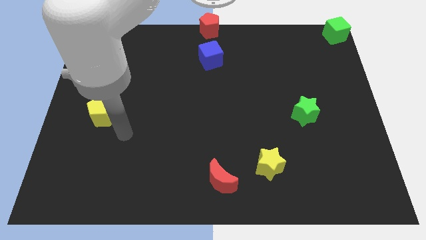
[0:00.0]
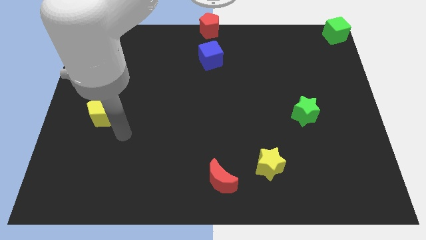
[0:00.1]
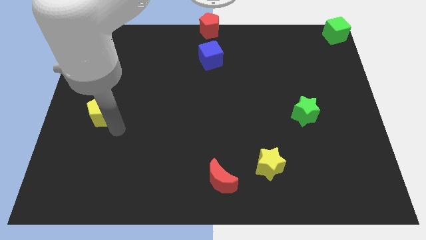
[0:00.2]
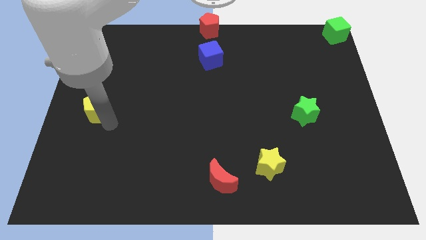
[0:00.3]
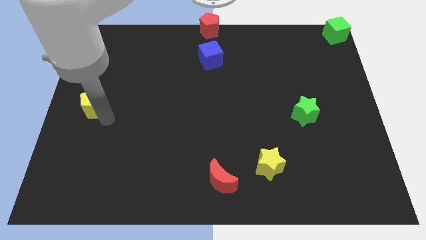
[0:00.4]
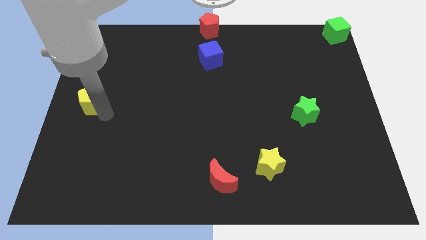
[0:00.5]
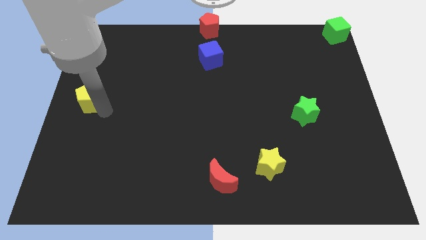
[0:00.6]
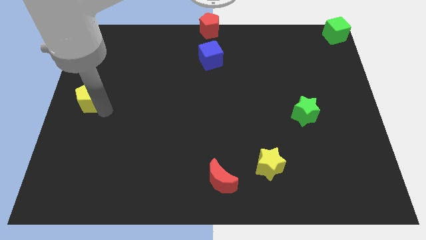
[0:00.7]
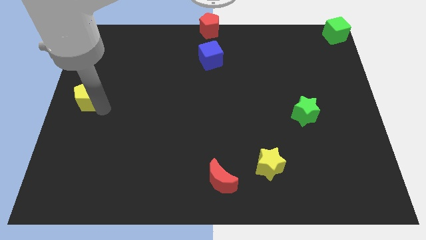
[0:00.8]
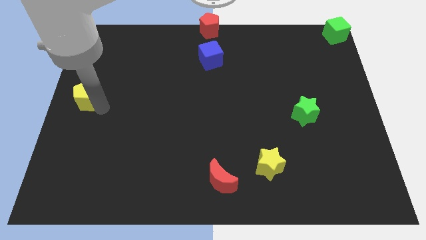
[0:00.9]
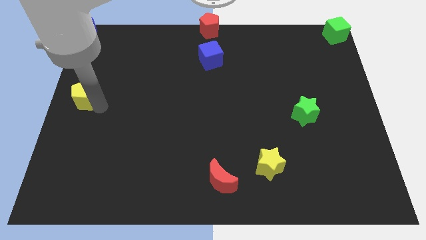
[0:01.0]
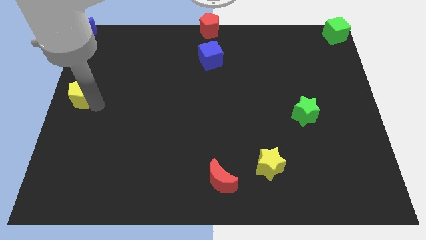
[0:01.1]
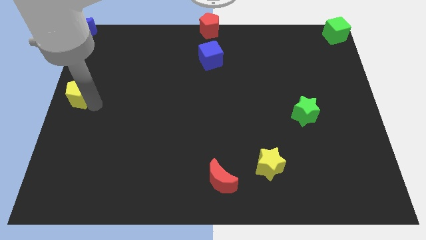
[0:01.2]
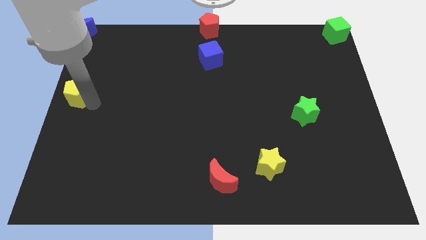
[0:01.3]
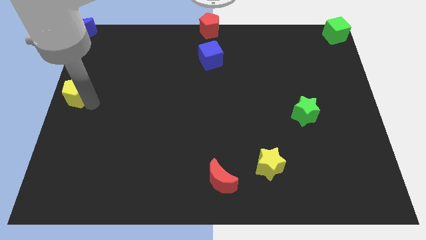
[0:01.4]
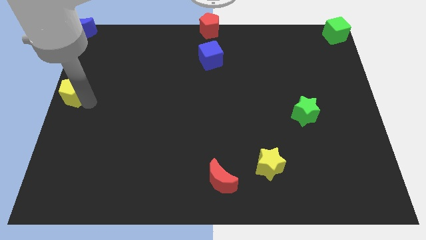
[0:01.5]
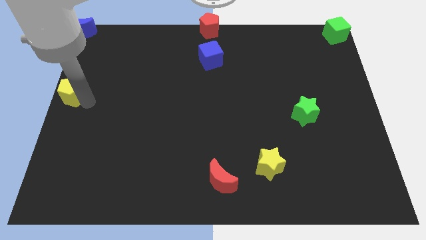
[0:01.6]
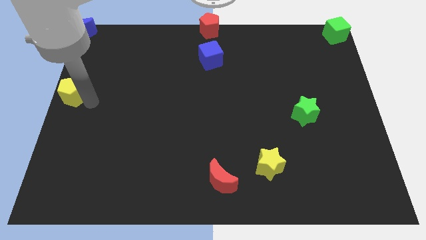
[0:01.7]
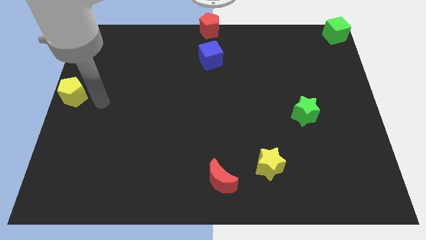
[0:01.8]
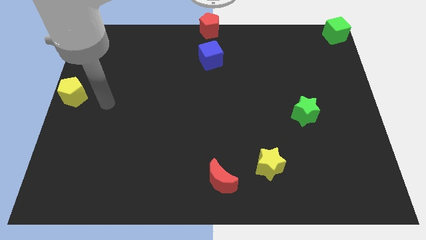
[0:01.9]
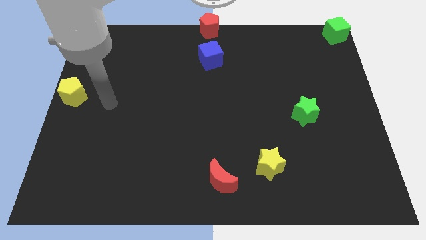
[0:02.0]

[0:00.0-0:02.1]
move the yellow pentagon to the left center of the board

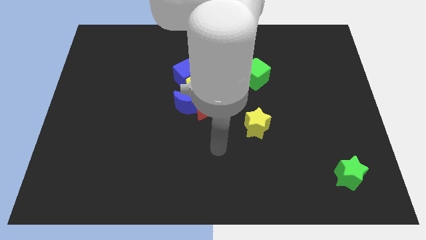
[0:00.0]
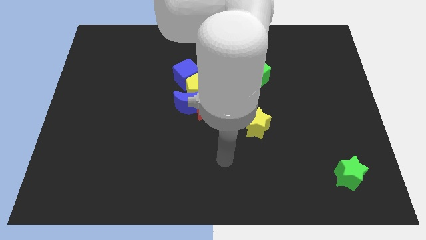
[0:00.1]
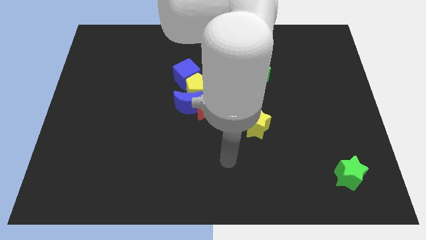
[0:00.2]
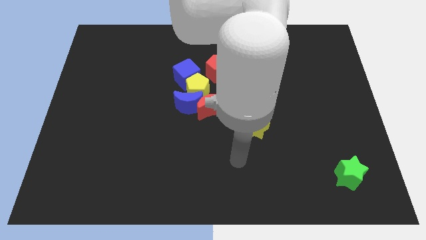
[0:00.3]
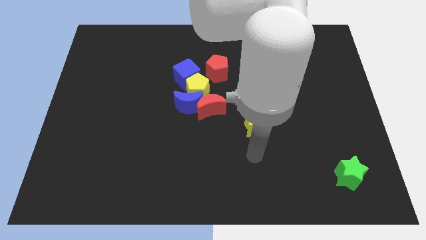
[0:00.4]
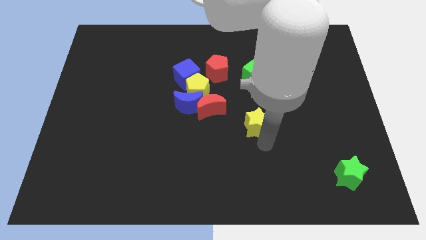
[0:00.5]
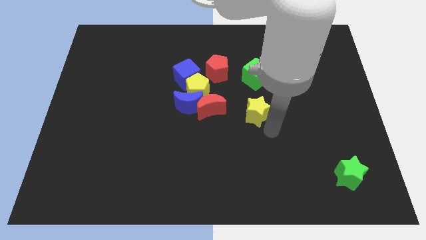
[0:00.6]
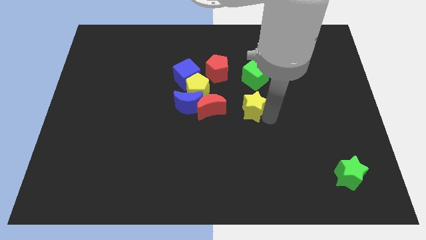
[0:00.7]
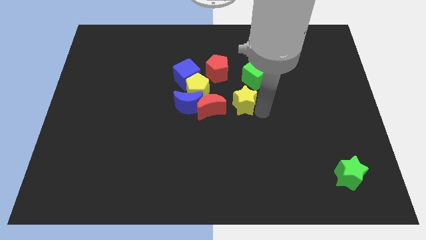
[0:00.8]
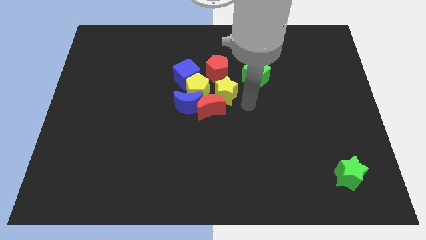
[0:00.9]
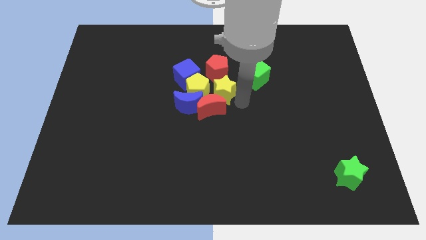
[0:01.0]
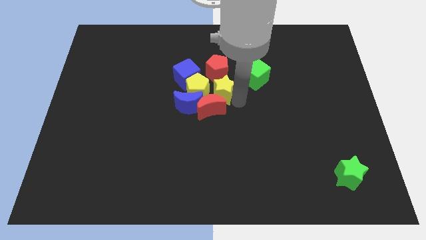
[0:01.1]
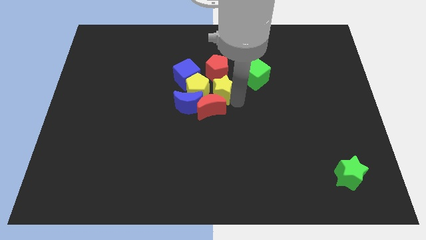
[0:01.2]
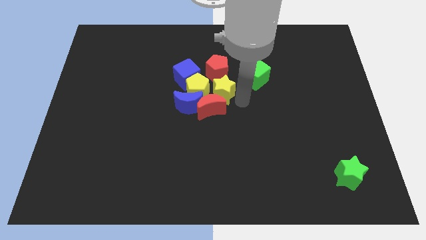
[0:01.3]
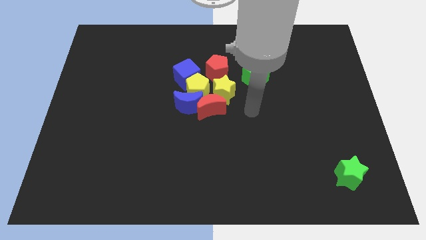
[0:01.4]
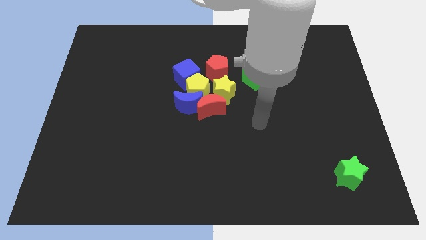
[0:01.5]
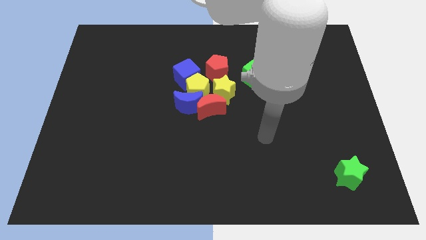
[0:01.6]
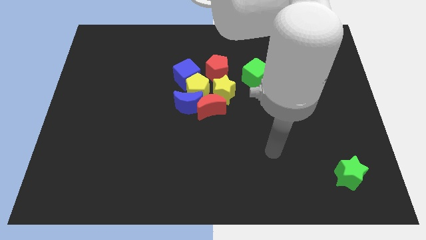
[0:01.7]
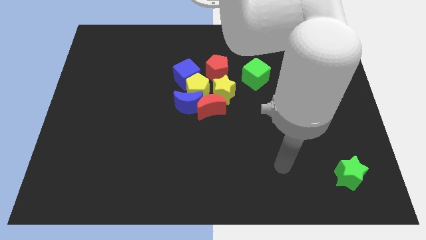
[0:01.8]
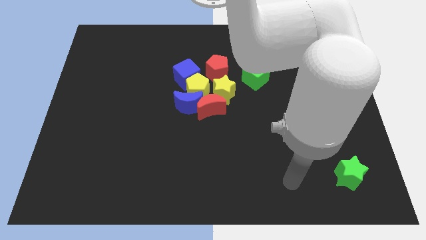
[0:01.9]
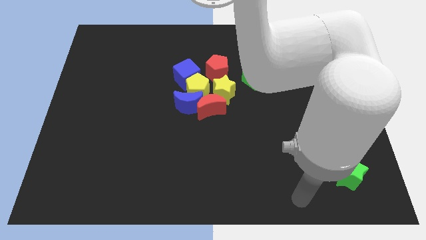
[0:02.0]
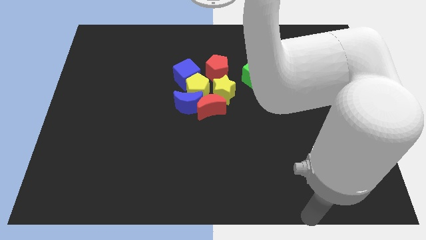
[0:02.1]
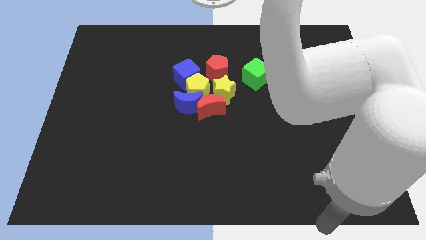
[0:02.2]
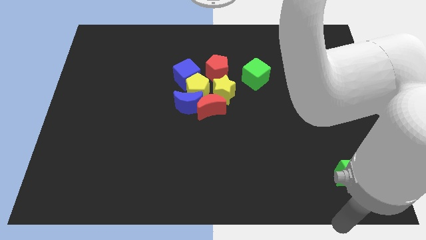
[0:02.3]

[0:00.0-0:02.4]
push the yellow pentagon right side of the yellow pentagon

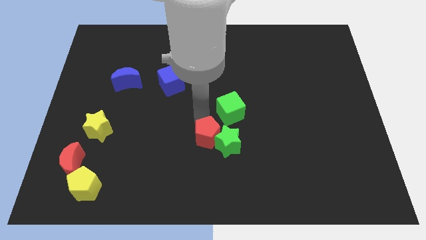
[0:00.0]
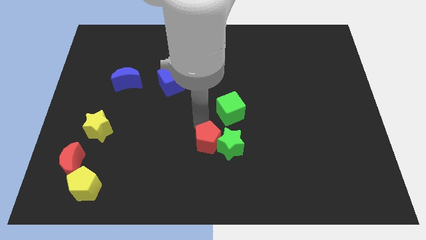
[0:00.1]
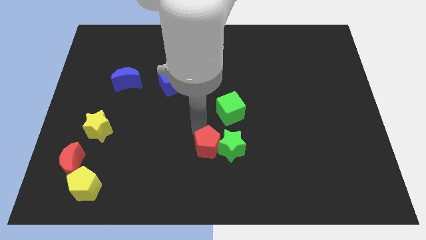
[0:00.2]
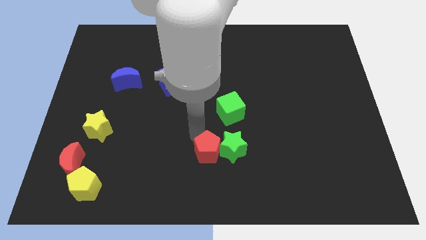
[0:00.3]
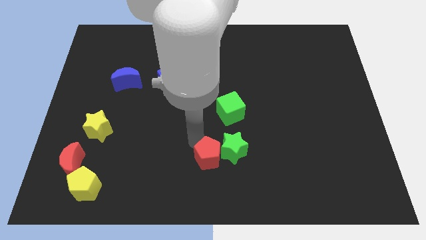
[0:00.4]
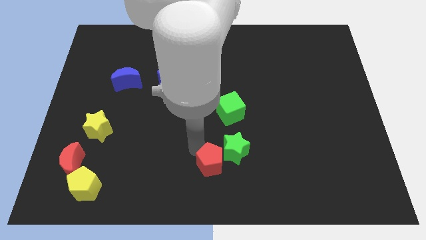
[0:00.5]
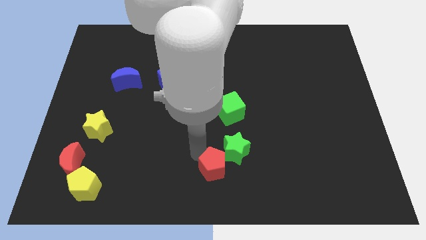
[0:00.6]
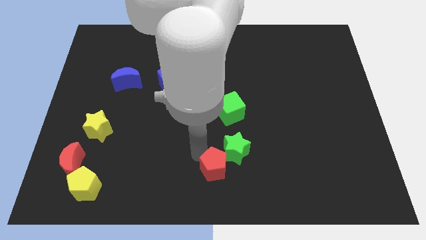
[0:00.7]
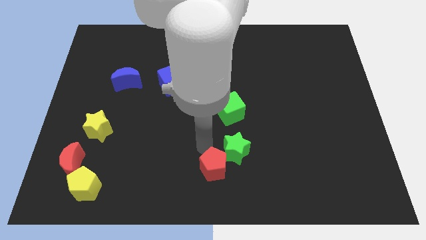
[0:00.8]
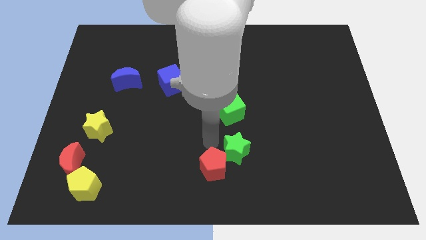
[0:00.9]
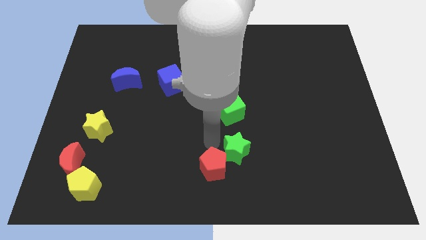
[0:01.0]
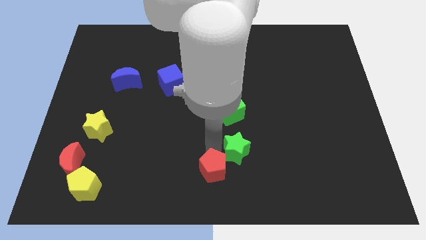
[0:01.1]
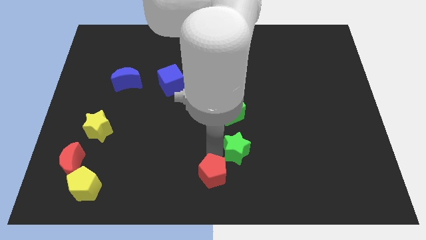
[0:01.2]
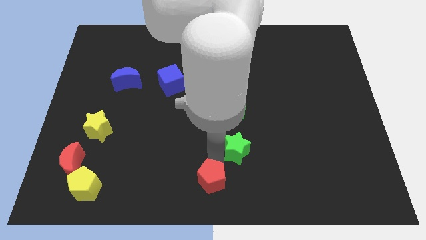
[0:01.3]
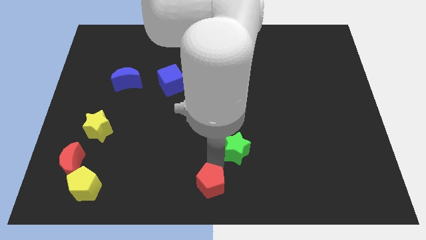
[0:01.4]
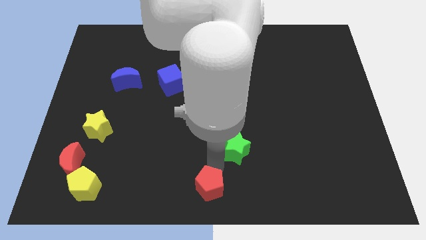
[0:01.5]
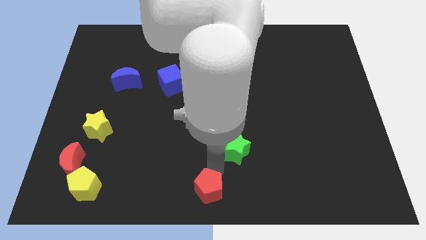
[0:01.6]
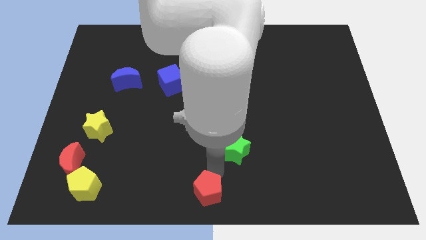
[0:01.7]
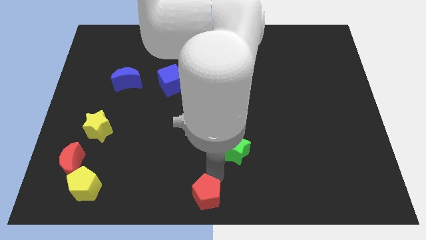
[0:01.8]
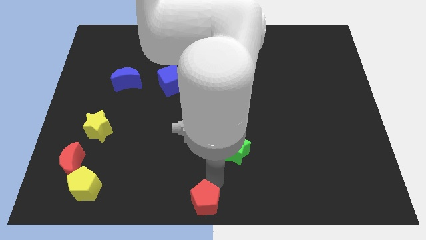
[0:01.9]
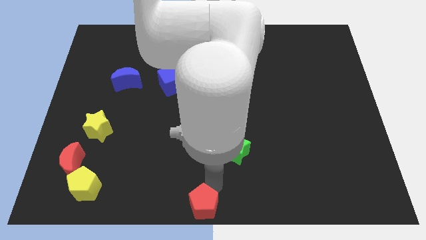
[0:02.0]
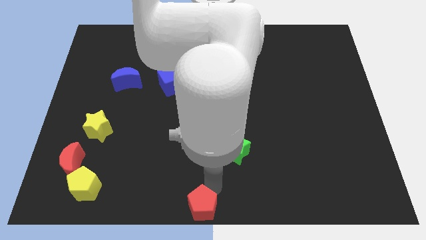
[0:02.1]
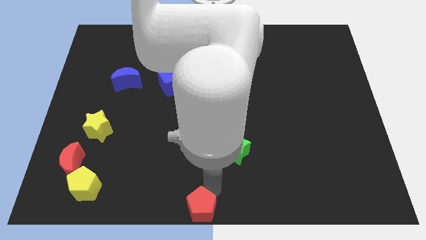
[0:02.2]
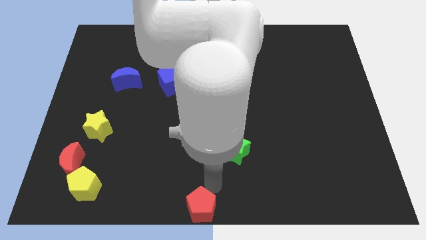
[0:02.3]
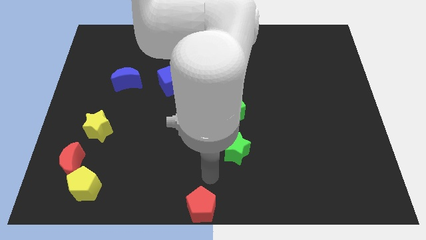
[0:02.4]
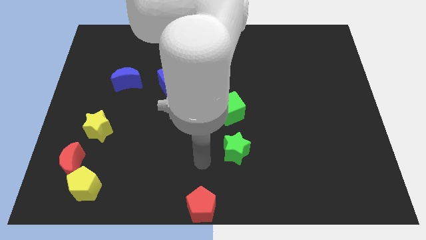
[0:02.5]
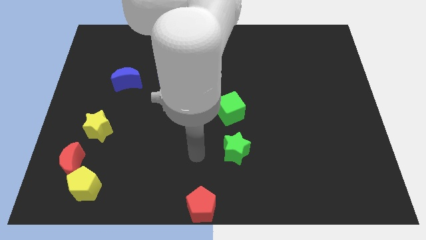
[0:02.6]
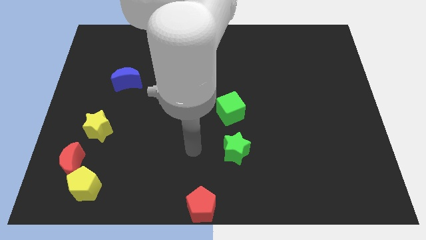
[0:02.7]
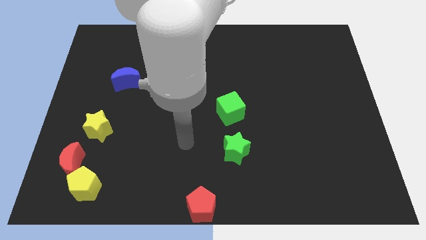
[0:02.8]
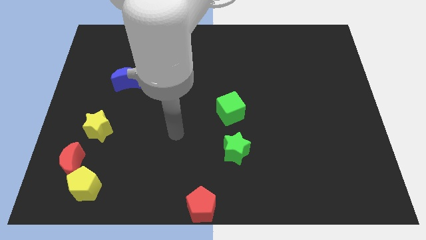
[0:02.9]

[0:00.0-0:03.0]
place the red pentagon at the bottom center of the board

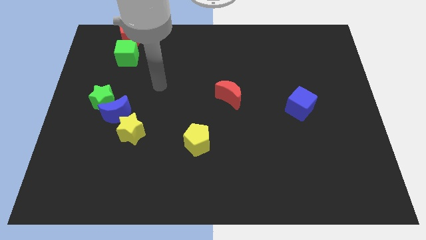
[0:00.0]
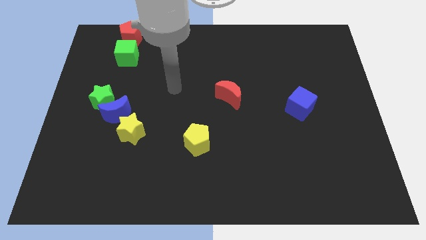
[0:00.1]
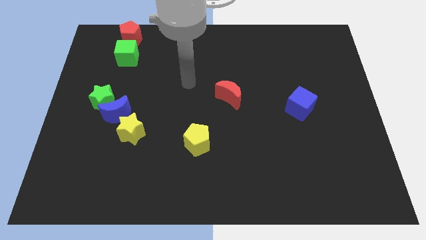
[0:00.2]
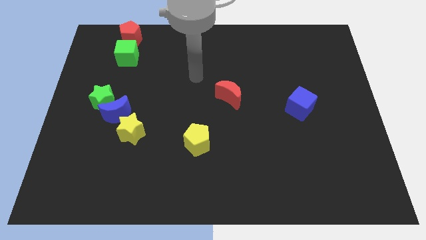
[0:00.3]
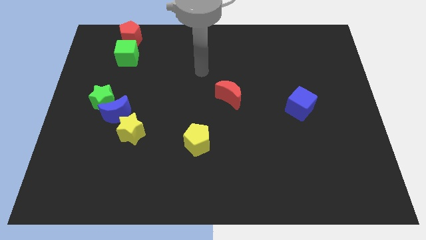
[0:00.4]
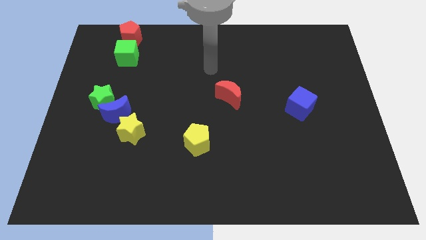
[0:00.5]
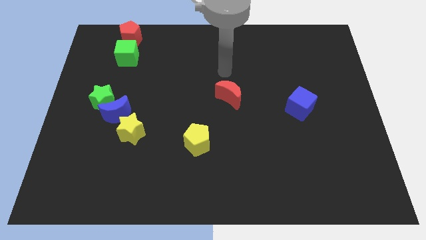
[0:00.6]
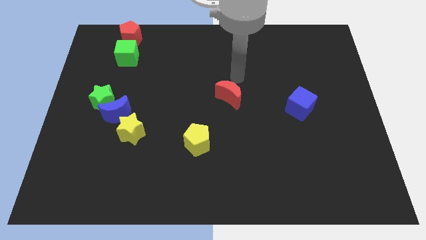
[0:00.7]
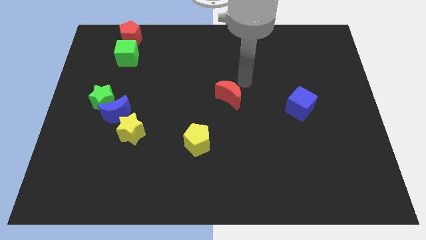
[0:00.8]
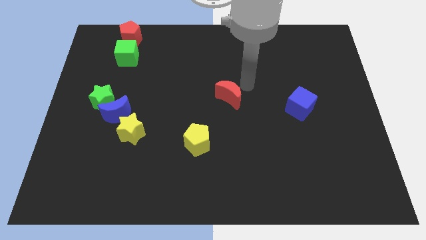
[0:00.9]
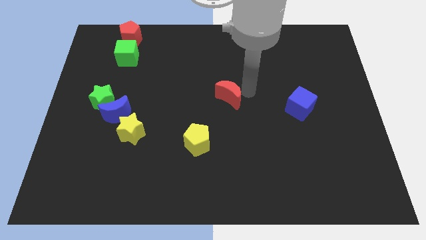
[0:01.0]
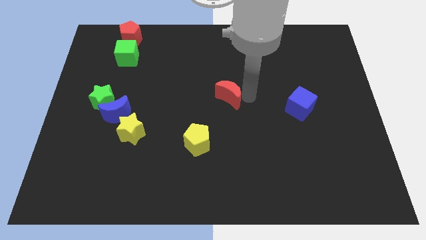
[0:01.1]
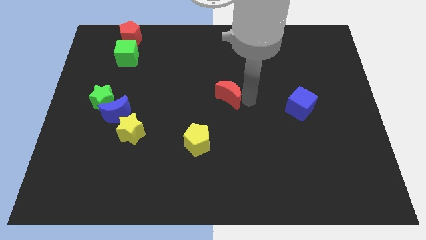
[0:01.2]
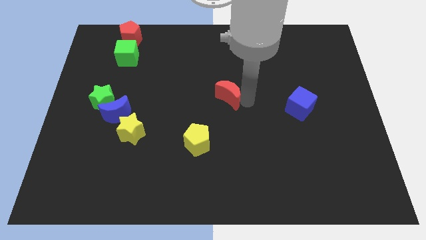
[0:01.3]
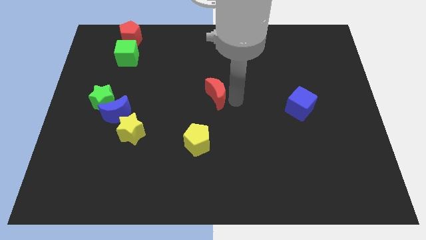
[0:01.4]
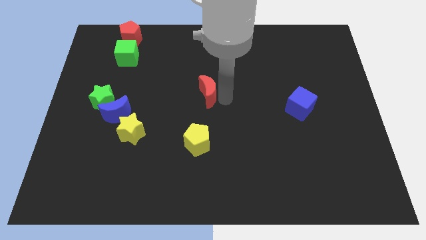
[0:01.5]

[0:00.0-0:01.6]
move the arm to the red crescent

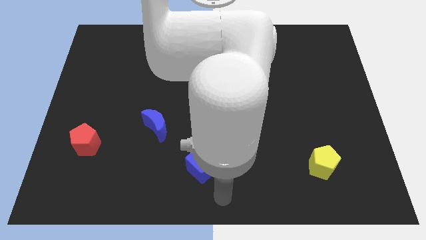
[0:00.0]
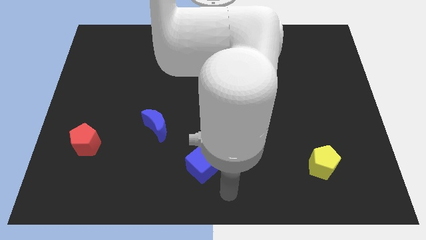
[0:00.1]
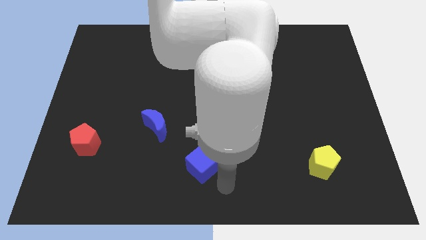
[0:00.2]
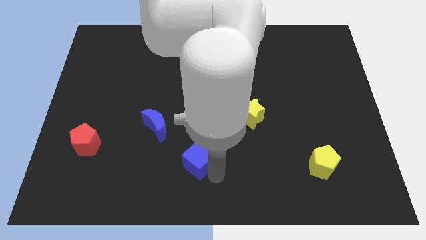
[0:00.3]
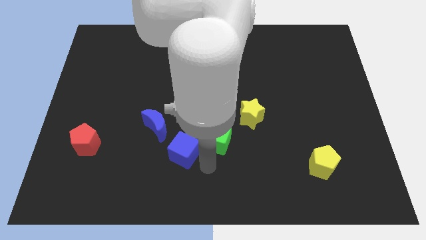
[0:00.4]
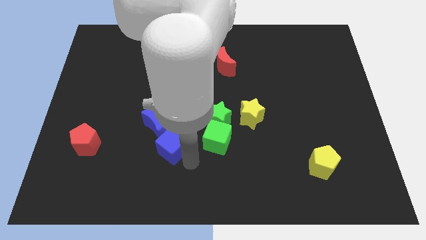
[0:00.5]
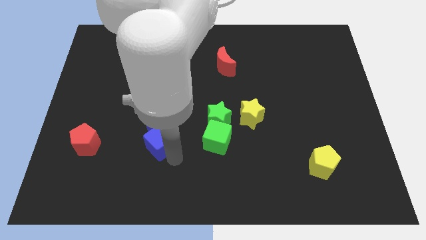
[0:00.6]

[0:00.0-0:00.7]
push the blue cube to the bottom side of the blue moon
